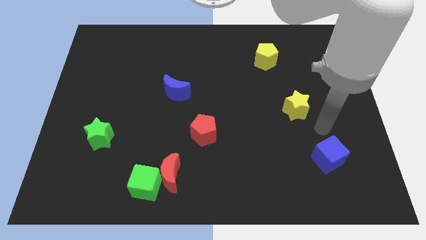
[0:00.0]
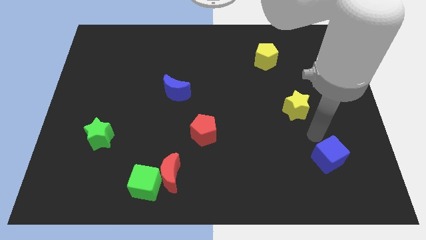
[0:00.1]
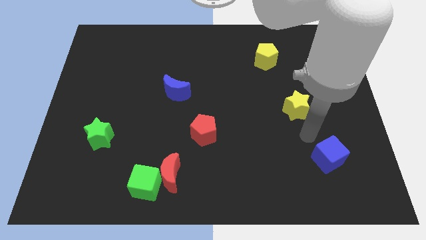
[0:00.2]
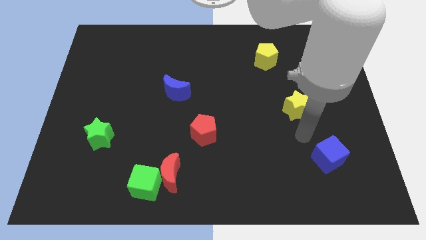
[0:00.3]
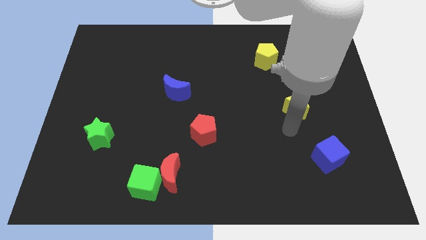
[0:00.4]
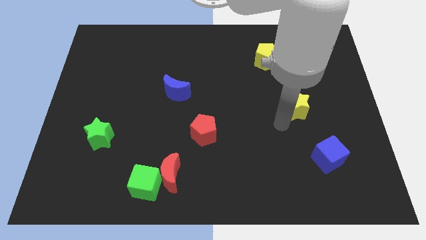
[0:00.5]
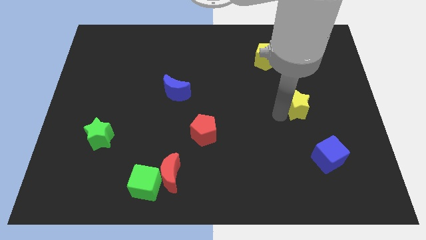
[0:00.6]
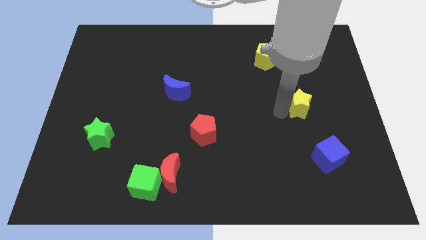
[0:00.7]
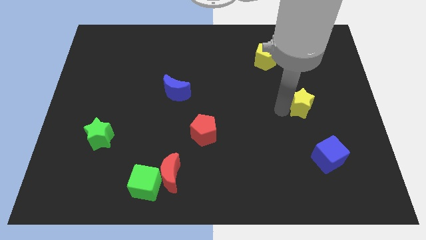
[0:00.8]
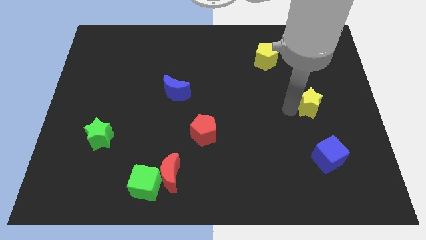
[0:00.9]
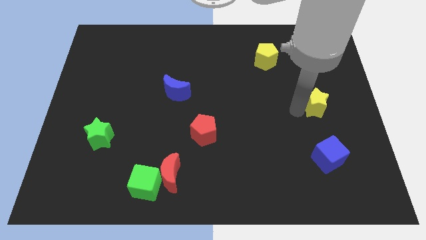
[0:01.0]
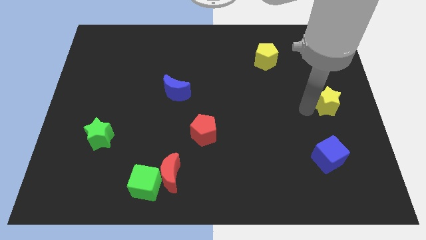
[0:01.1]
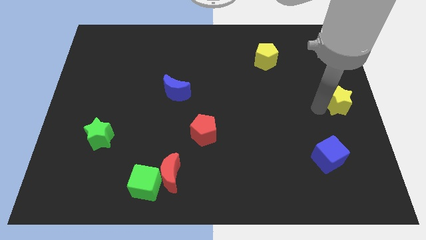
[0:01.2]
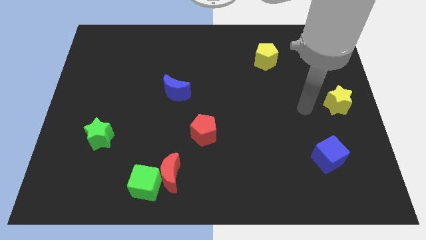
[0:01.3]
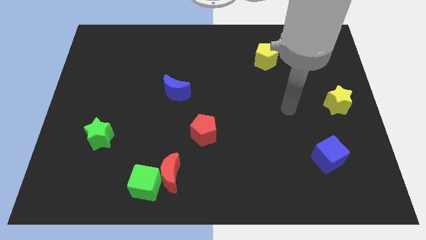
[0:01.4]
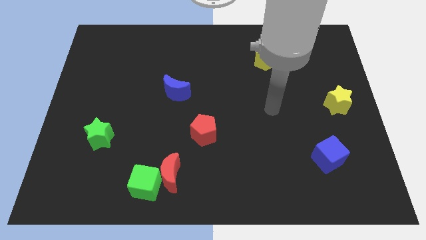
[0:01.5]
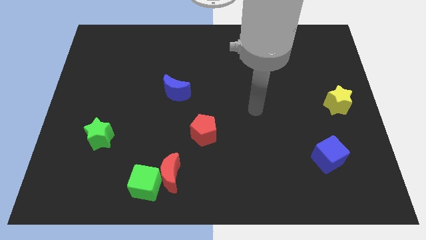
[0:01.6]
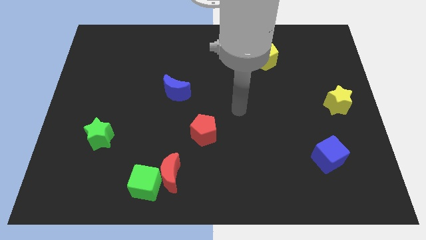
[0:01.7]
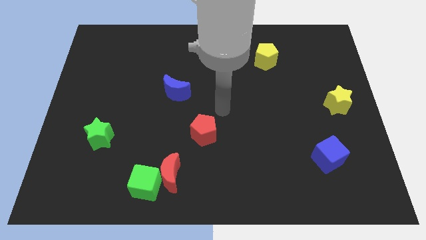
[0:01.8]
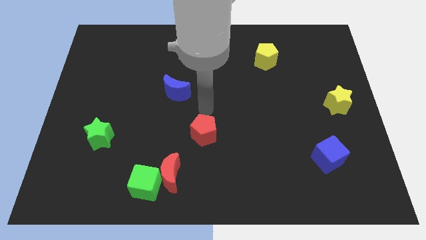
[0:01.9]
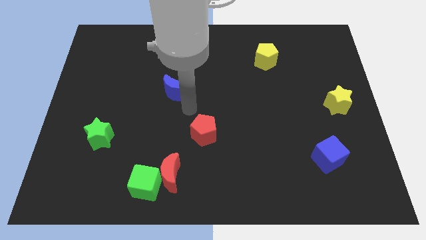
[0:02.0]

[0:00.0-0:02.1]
move the yellow star to the top right of the blue cube

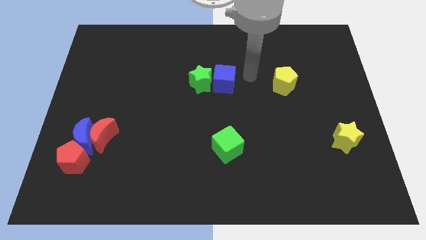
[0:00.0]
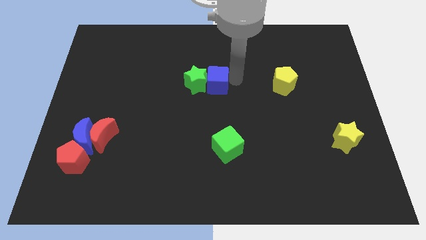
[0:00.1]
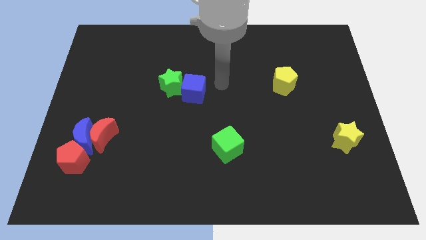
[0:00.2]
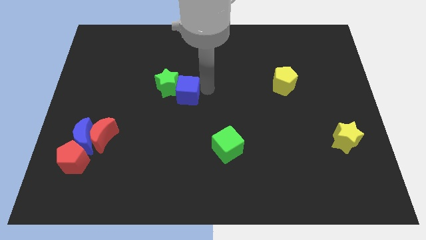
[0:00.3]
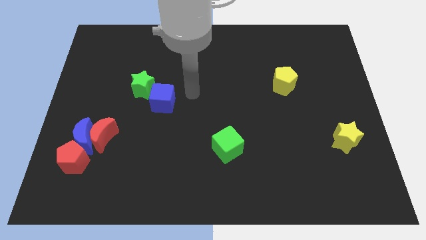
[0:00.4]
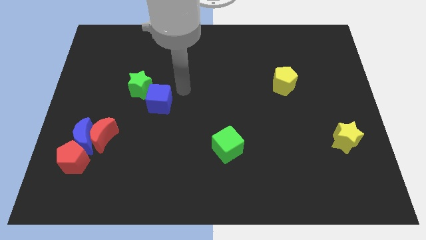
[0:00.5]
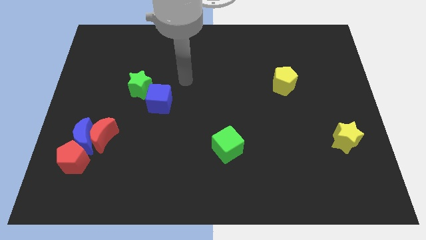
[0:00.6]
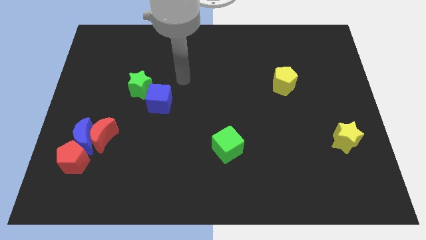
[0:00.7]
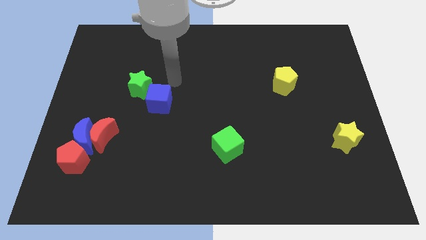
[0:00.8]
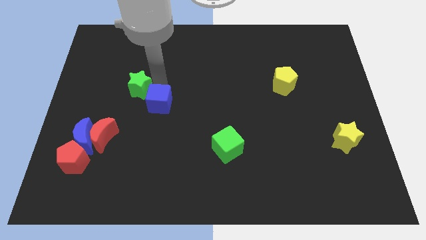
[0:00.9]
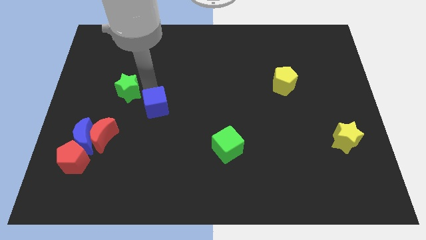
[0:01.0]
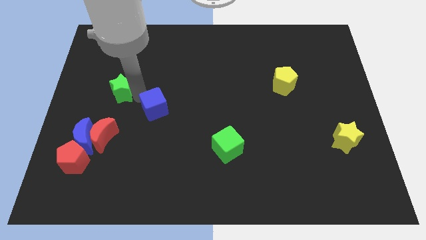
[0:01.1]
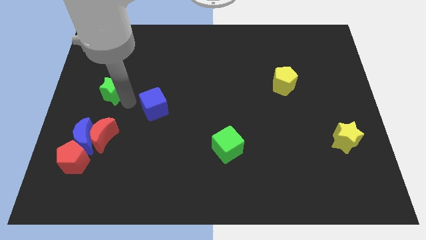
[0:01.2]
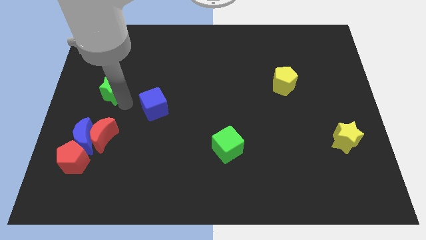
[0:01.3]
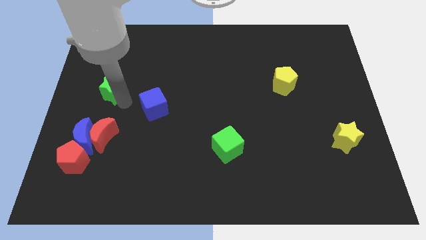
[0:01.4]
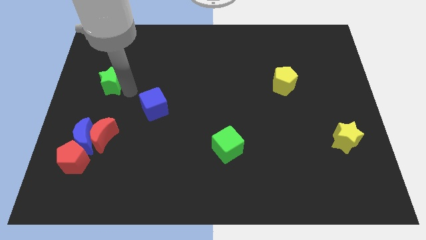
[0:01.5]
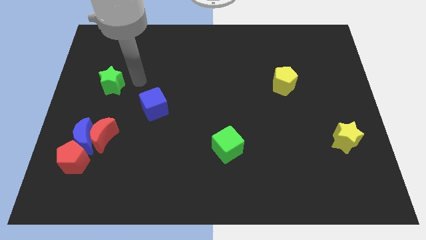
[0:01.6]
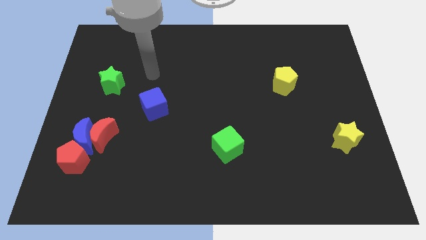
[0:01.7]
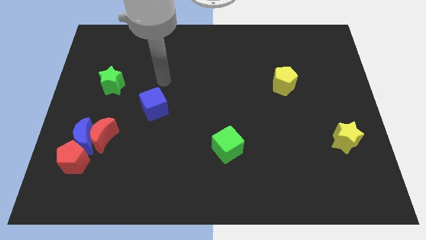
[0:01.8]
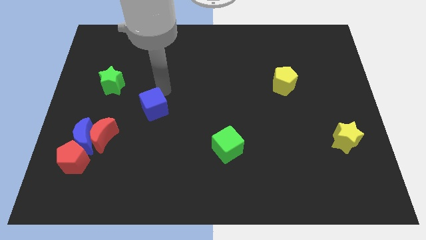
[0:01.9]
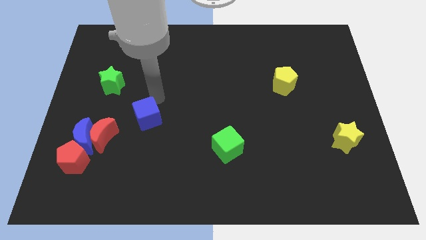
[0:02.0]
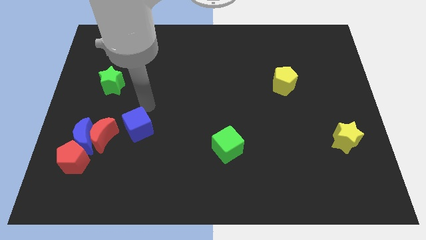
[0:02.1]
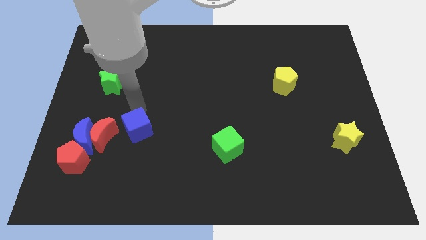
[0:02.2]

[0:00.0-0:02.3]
push the blue cube and green star to the left side of the board

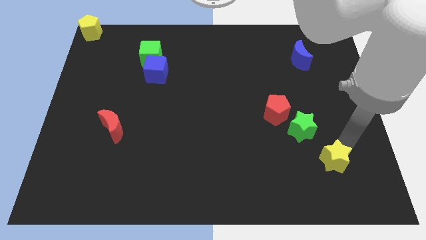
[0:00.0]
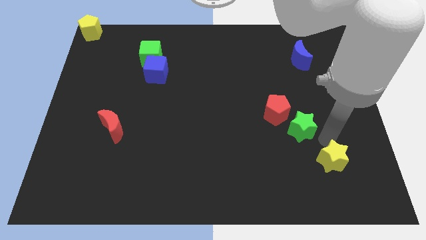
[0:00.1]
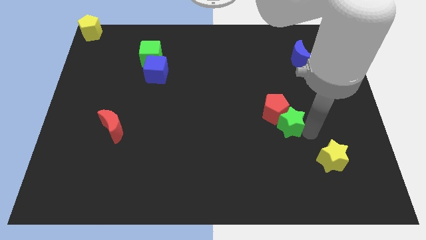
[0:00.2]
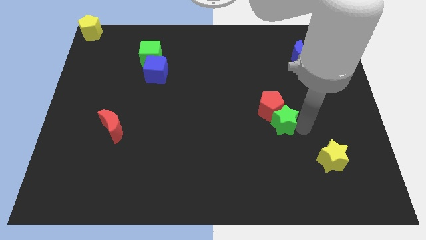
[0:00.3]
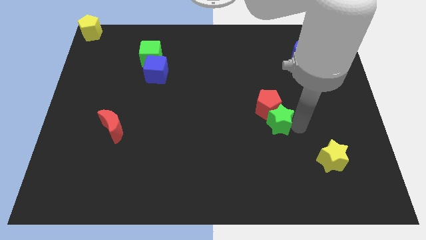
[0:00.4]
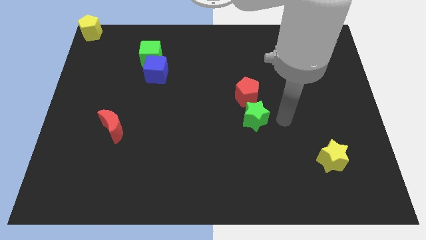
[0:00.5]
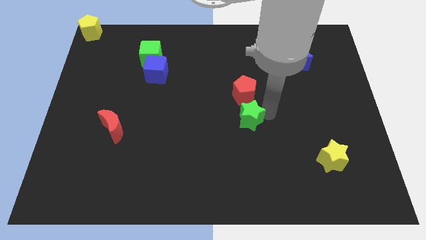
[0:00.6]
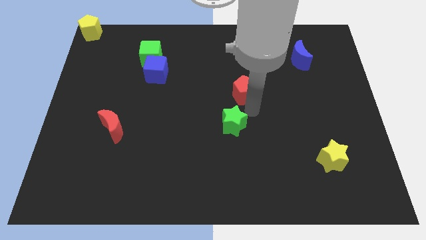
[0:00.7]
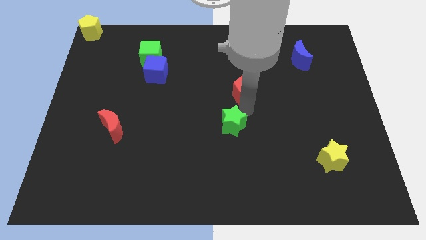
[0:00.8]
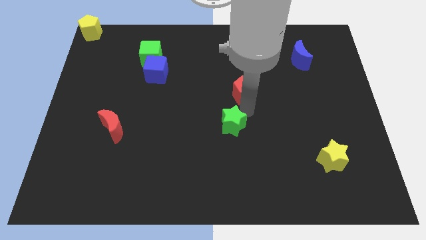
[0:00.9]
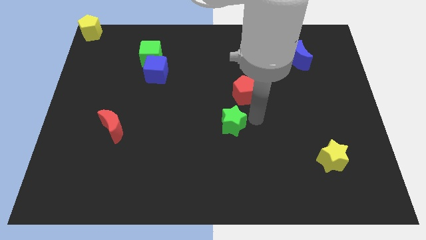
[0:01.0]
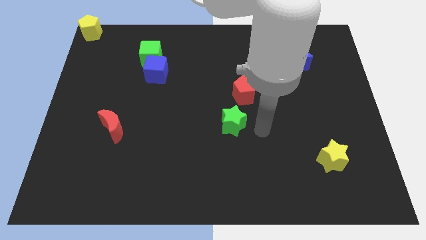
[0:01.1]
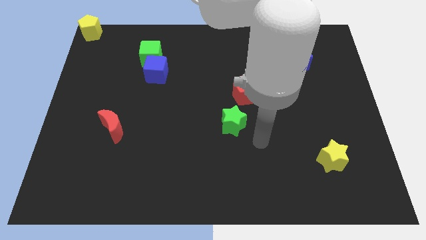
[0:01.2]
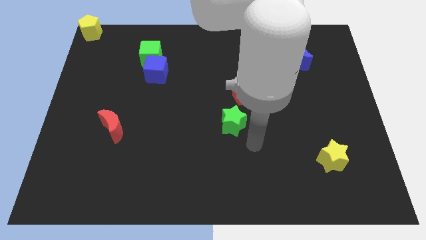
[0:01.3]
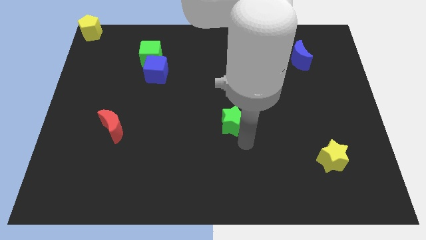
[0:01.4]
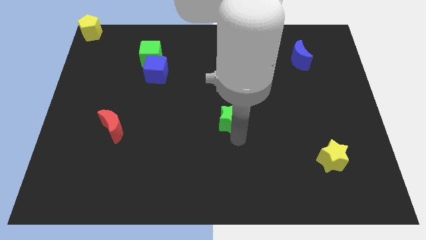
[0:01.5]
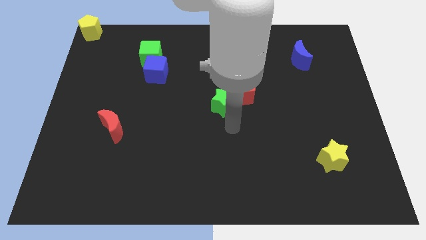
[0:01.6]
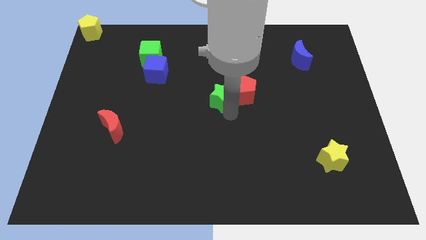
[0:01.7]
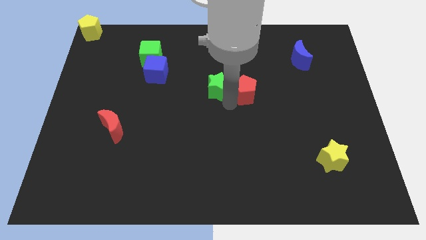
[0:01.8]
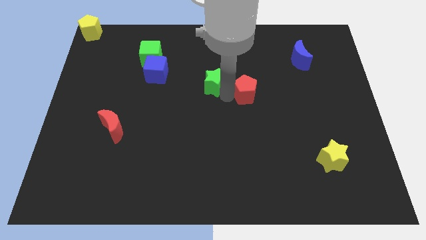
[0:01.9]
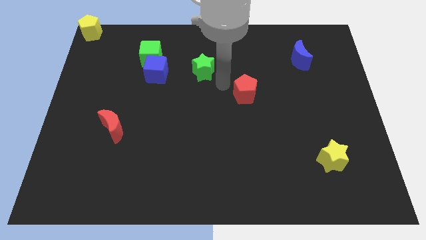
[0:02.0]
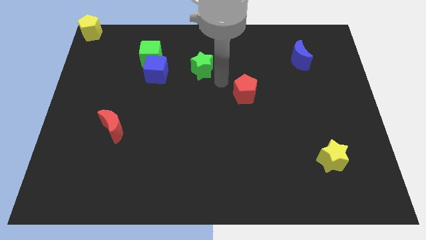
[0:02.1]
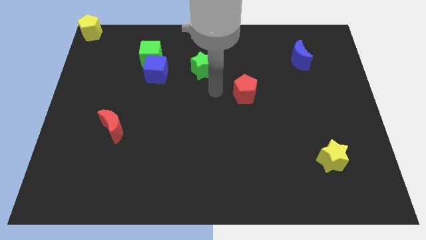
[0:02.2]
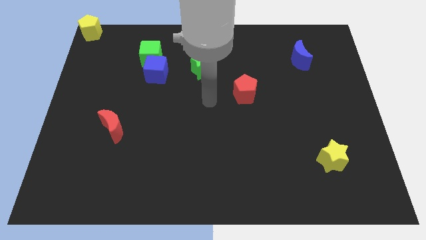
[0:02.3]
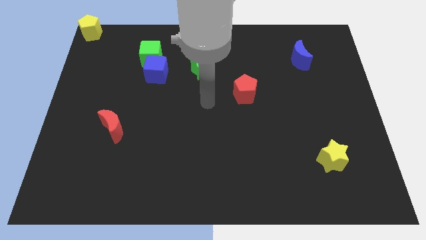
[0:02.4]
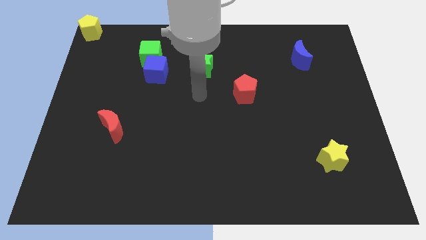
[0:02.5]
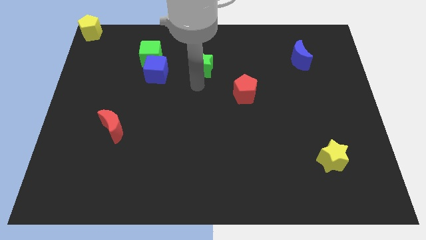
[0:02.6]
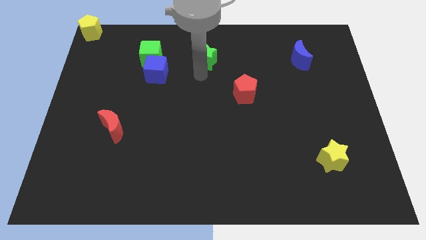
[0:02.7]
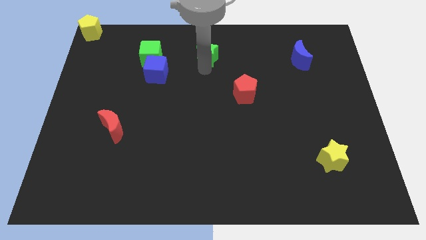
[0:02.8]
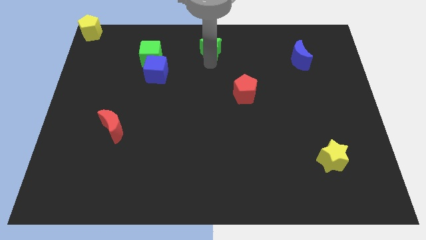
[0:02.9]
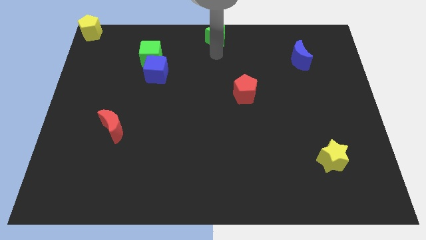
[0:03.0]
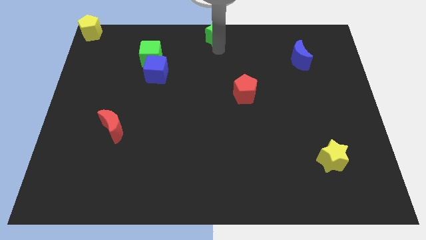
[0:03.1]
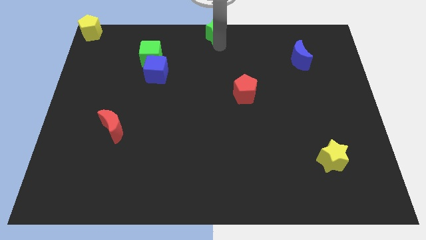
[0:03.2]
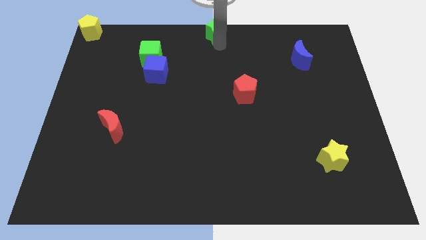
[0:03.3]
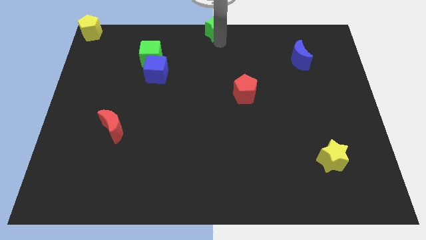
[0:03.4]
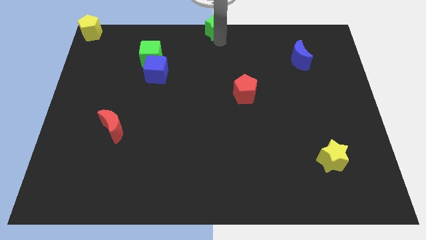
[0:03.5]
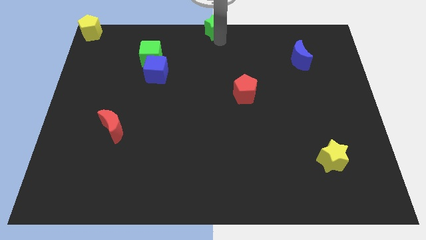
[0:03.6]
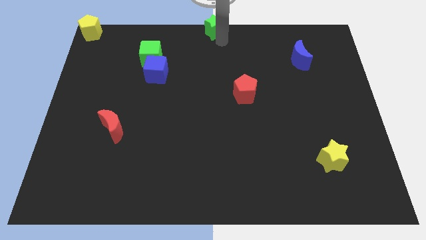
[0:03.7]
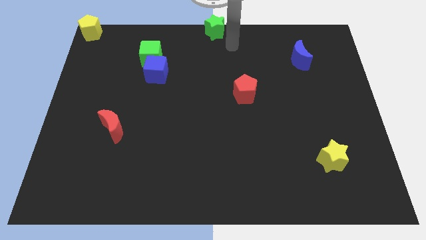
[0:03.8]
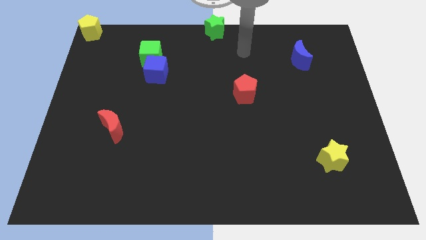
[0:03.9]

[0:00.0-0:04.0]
push the green star to the top center

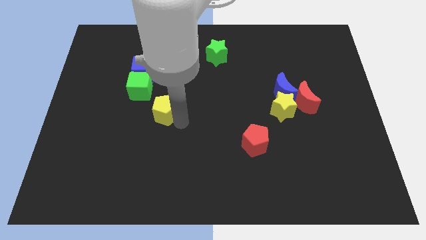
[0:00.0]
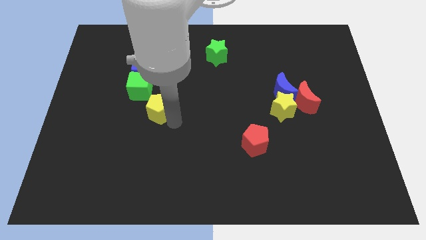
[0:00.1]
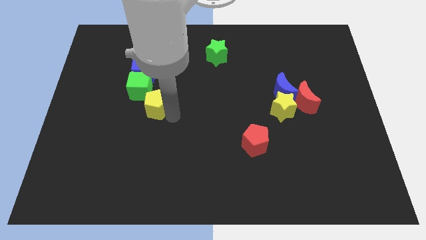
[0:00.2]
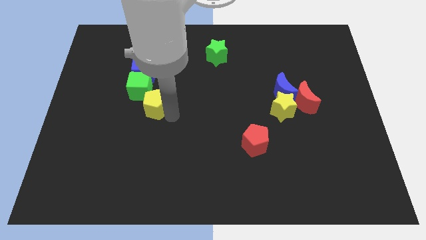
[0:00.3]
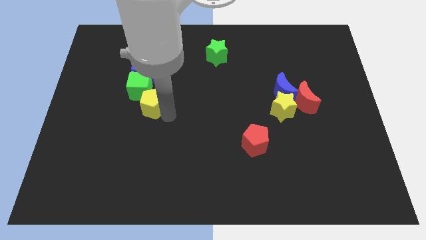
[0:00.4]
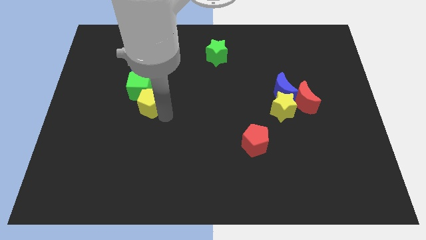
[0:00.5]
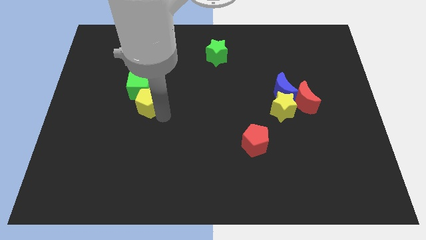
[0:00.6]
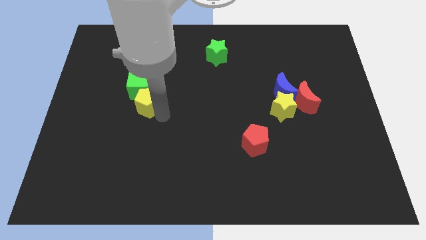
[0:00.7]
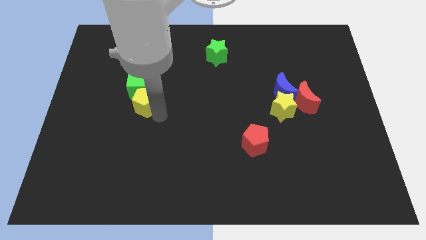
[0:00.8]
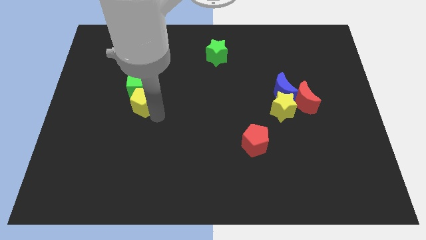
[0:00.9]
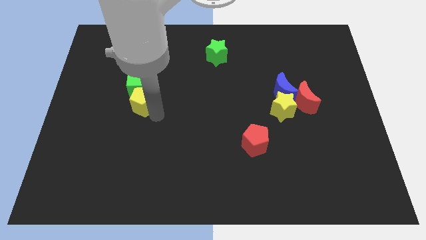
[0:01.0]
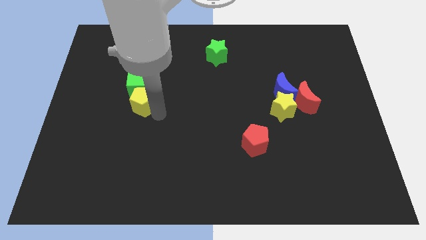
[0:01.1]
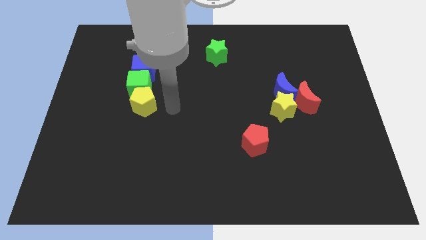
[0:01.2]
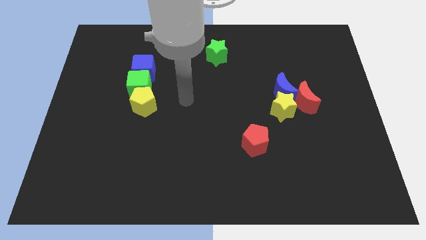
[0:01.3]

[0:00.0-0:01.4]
place the yellow pentagon below the green cube
